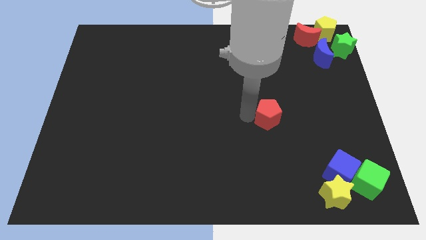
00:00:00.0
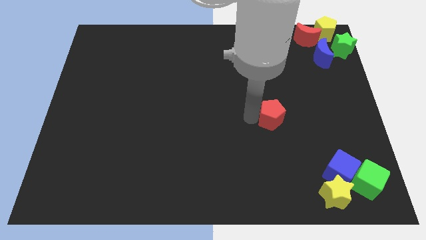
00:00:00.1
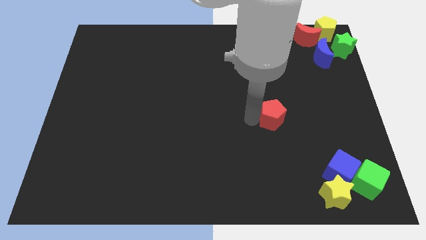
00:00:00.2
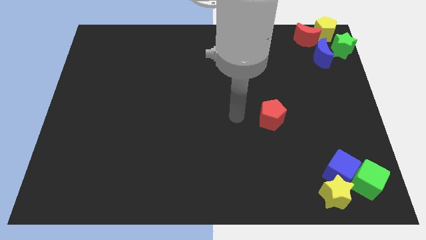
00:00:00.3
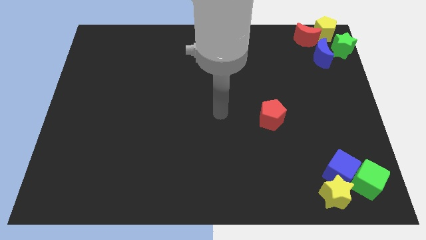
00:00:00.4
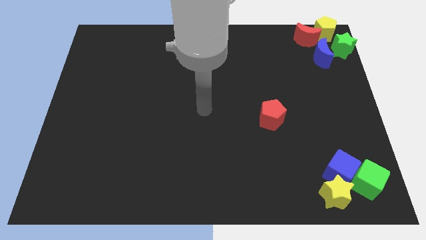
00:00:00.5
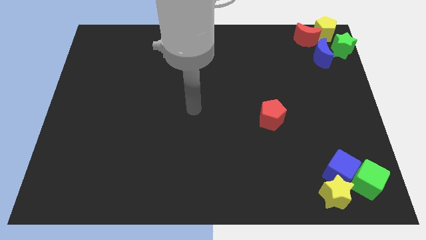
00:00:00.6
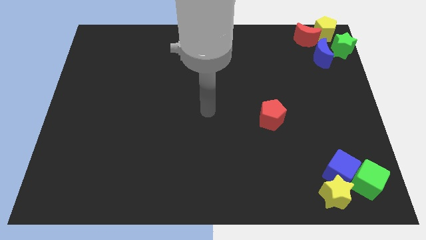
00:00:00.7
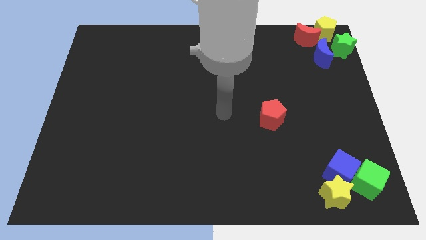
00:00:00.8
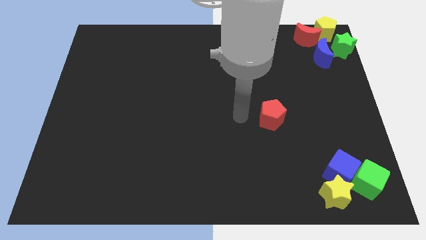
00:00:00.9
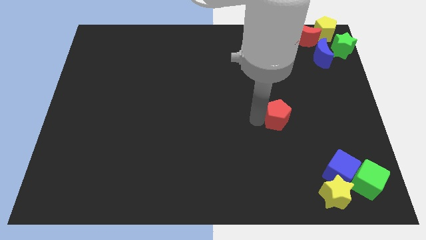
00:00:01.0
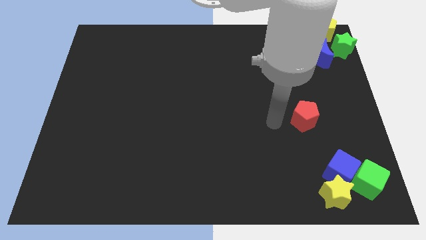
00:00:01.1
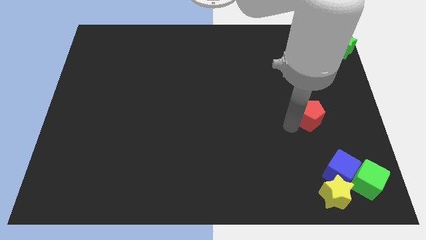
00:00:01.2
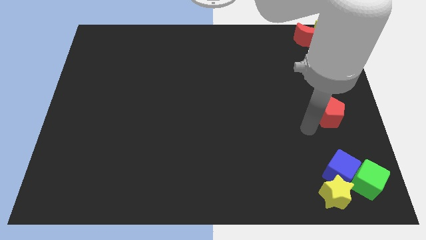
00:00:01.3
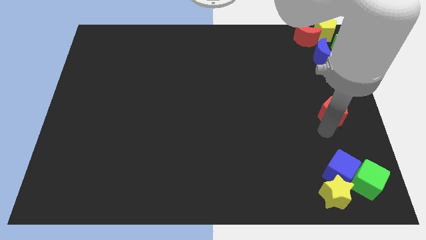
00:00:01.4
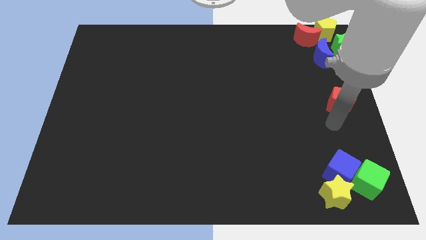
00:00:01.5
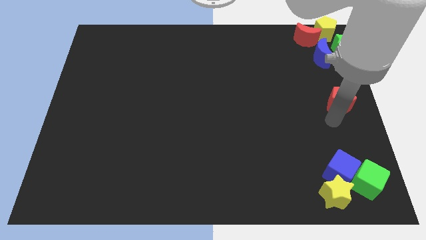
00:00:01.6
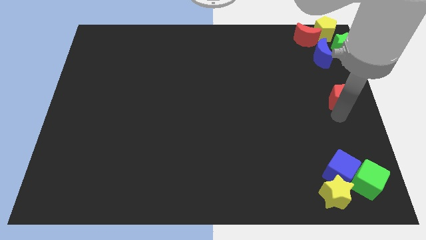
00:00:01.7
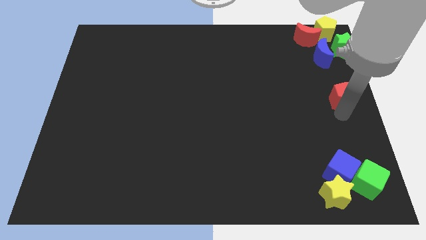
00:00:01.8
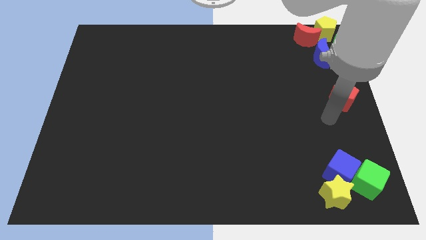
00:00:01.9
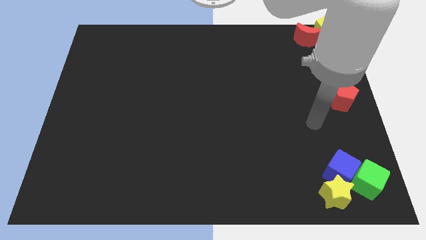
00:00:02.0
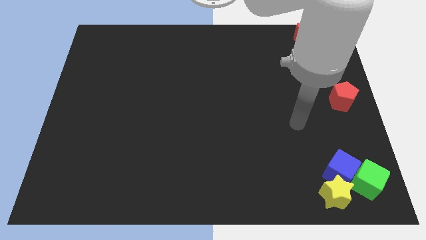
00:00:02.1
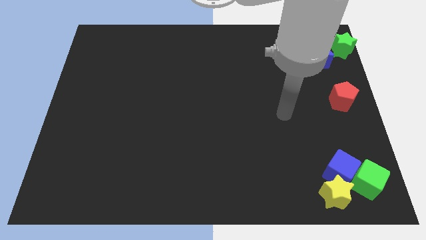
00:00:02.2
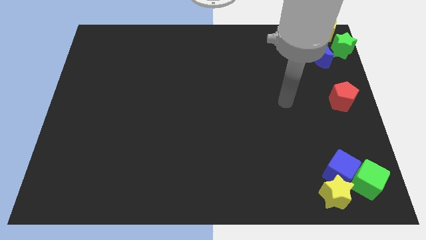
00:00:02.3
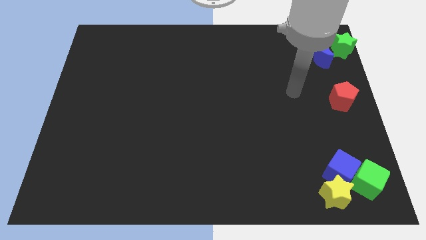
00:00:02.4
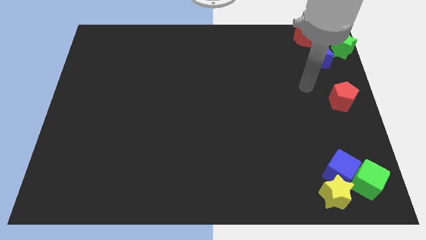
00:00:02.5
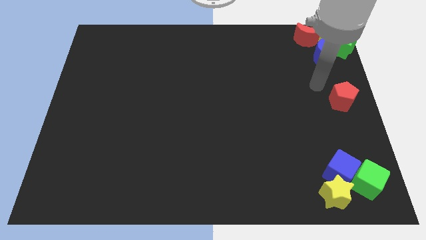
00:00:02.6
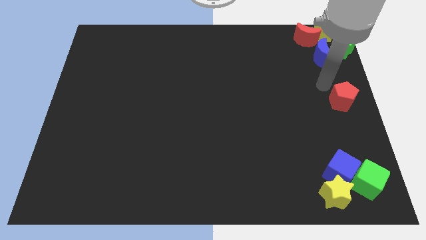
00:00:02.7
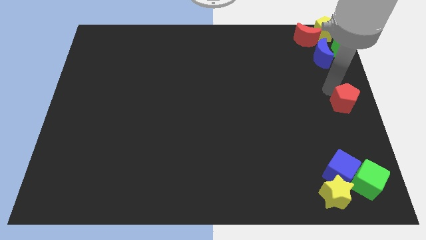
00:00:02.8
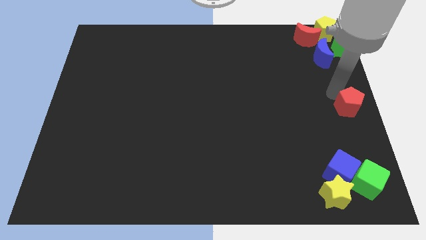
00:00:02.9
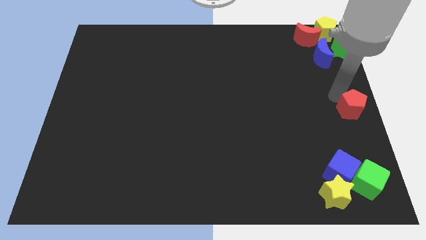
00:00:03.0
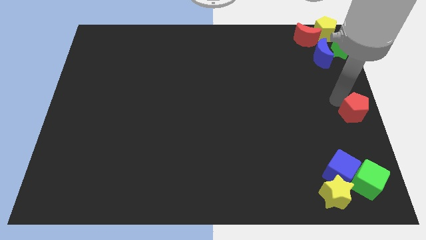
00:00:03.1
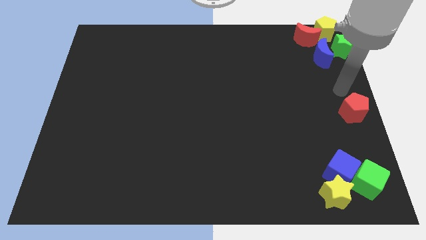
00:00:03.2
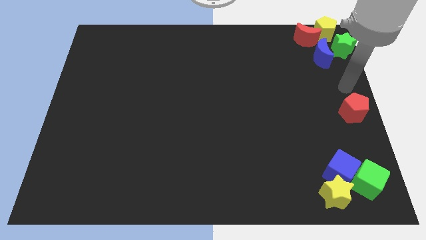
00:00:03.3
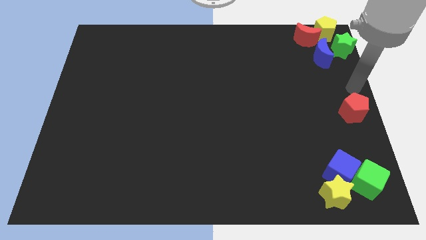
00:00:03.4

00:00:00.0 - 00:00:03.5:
place the red pentagon at the center right of the table

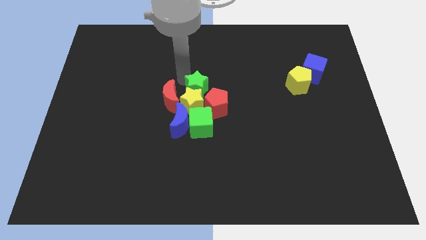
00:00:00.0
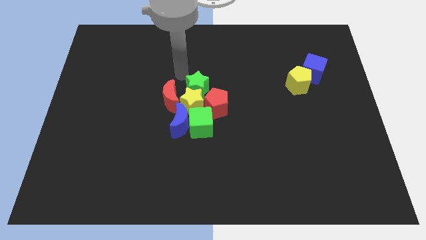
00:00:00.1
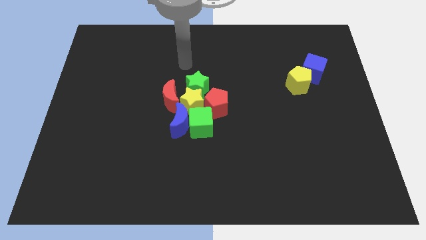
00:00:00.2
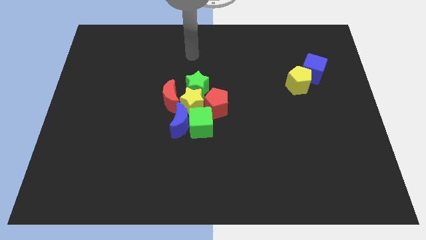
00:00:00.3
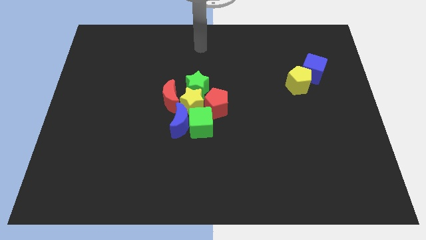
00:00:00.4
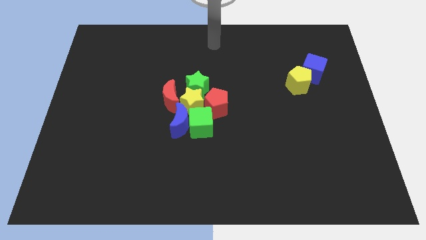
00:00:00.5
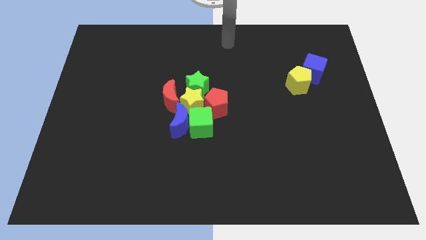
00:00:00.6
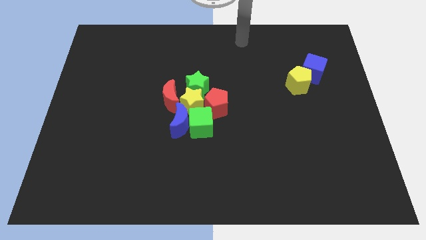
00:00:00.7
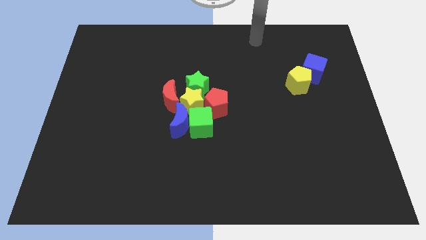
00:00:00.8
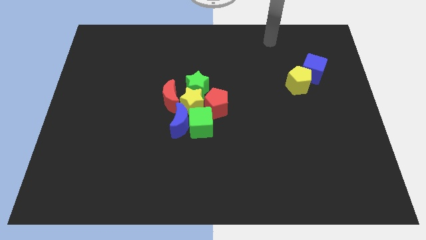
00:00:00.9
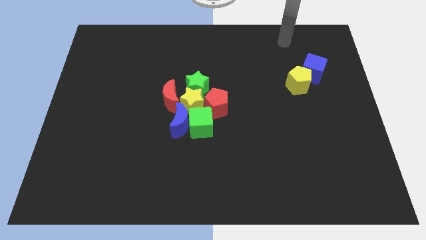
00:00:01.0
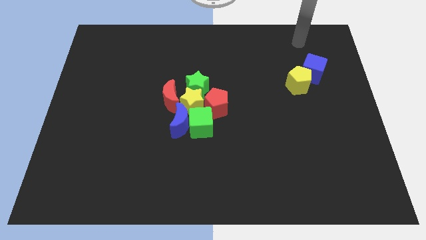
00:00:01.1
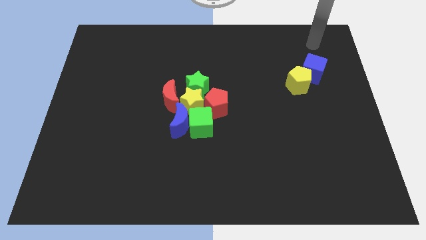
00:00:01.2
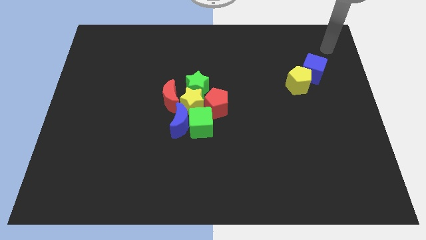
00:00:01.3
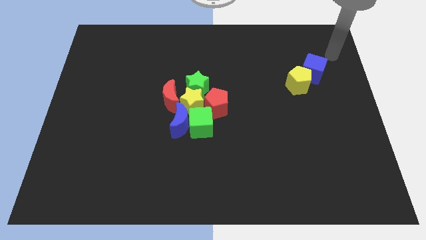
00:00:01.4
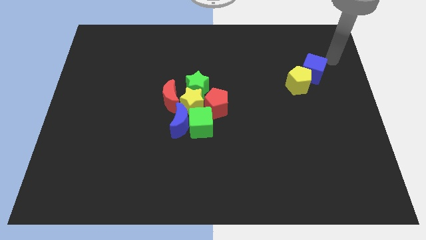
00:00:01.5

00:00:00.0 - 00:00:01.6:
point your arm at the top side of the blue cube

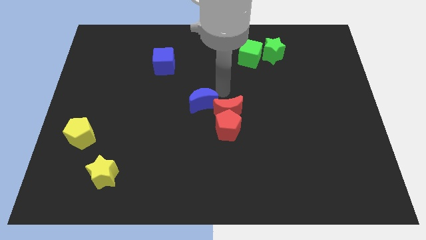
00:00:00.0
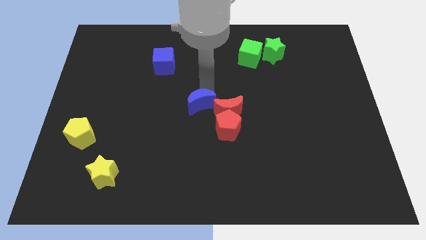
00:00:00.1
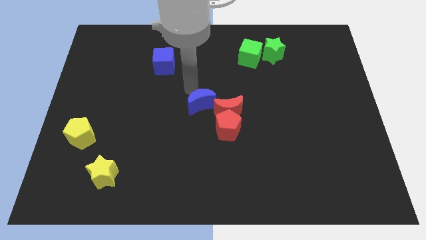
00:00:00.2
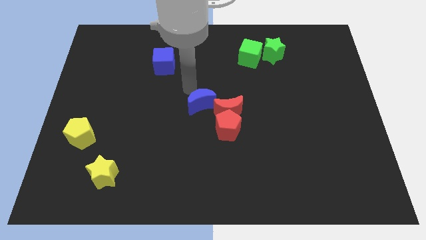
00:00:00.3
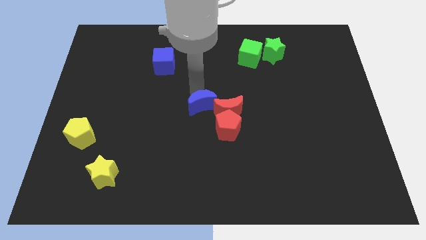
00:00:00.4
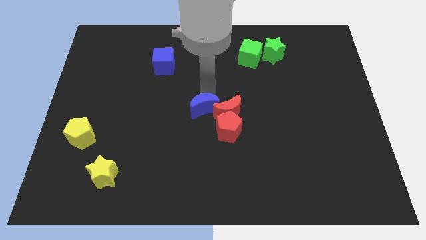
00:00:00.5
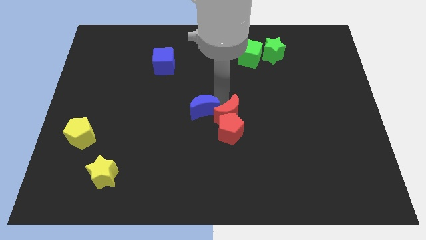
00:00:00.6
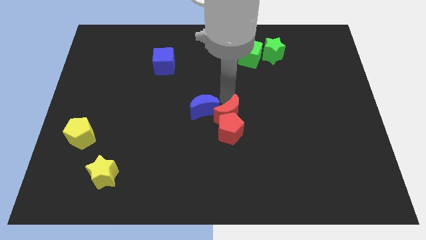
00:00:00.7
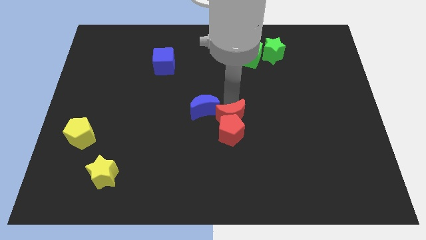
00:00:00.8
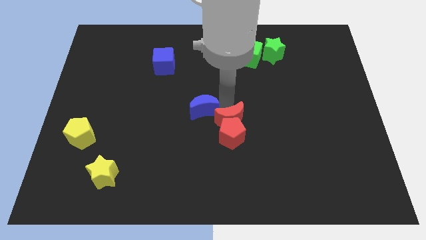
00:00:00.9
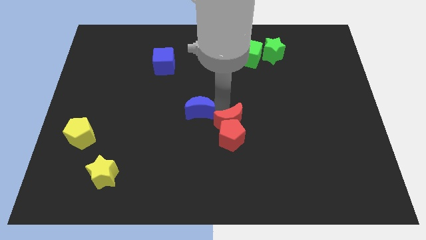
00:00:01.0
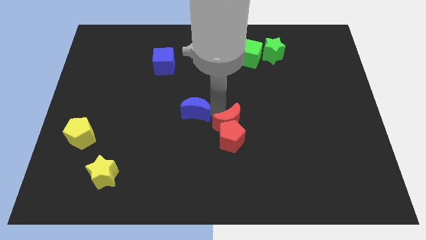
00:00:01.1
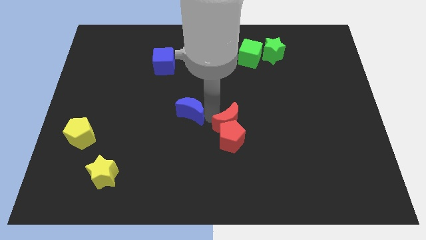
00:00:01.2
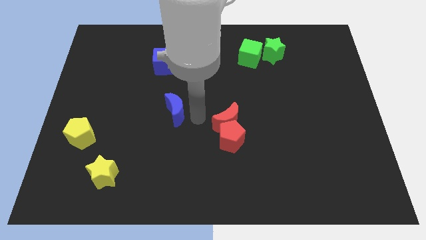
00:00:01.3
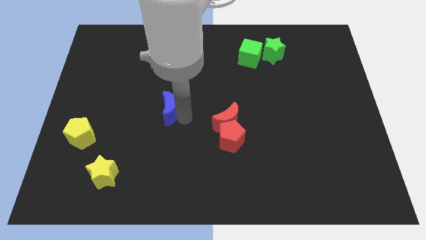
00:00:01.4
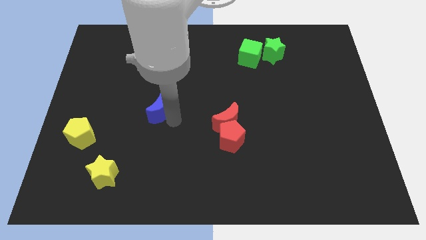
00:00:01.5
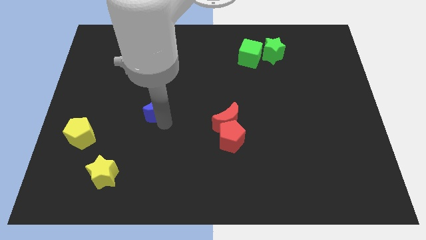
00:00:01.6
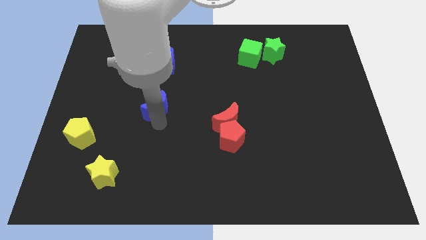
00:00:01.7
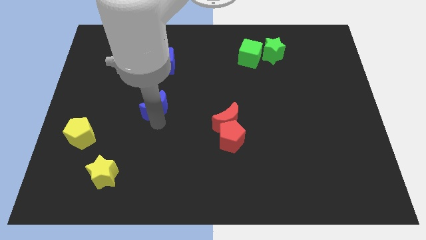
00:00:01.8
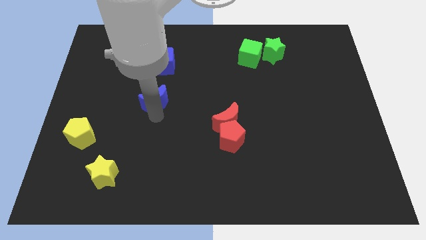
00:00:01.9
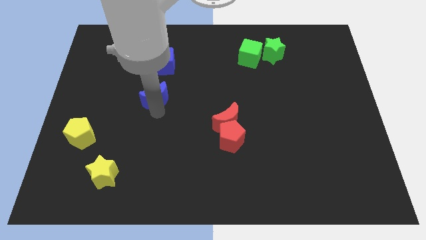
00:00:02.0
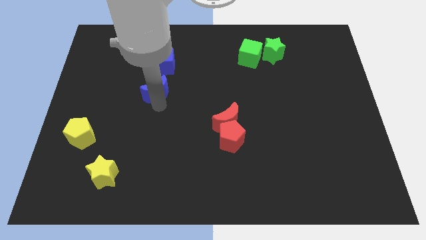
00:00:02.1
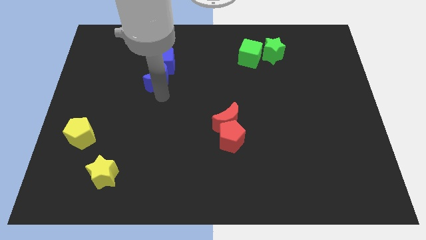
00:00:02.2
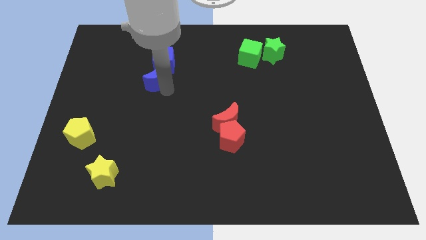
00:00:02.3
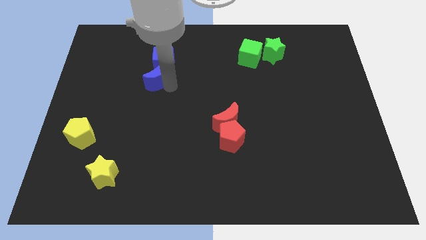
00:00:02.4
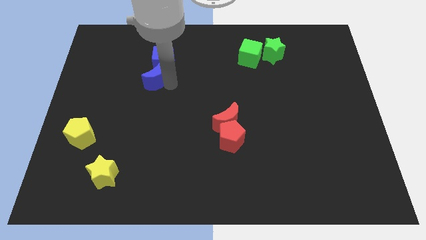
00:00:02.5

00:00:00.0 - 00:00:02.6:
place the blue moon at the bottom of the blue cube

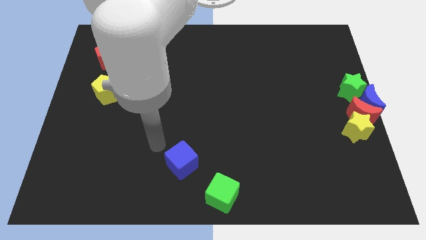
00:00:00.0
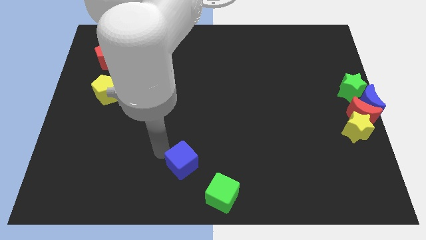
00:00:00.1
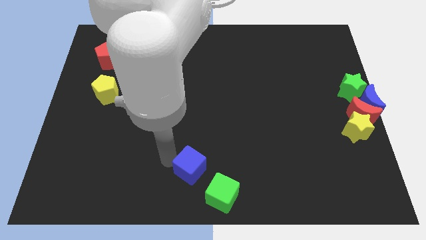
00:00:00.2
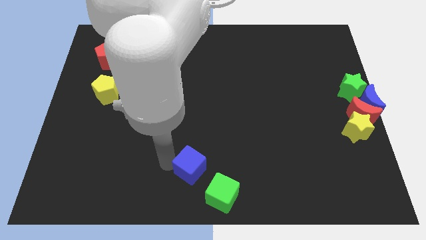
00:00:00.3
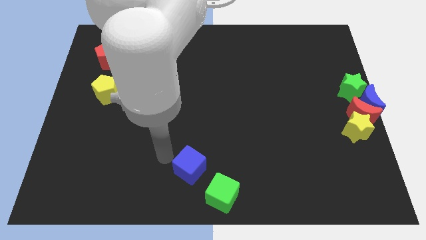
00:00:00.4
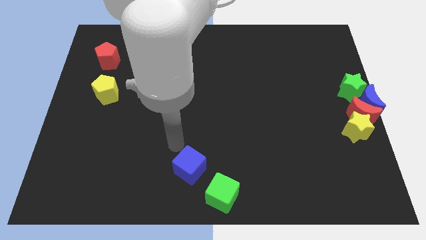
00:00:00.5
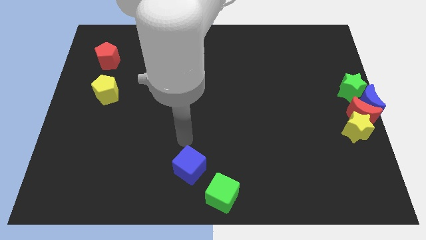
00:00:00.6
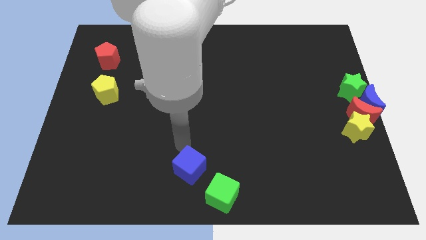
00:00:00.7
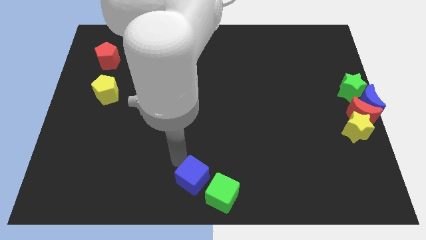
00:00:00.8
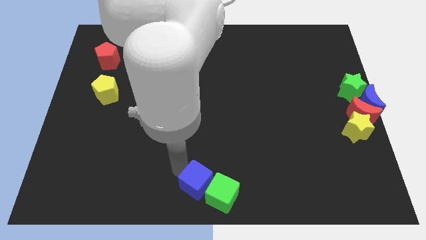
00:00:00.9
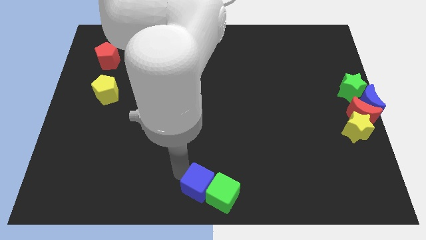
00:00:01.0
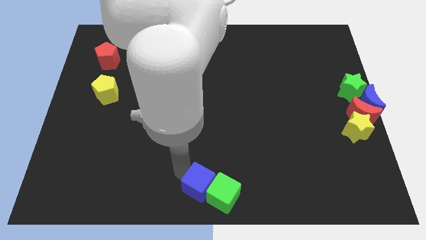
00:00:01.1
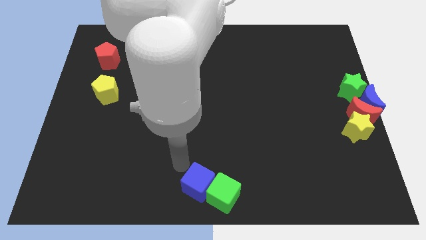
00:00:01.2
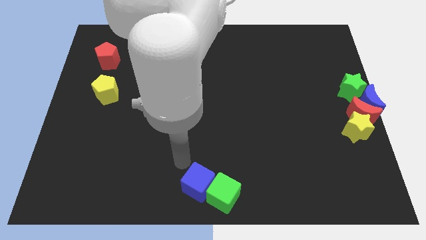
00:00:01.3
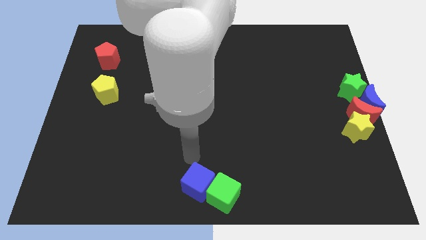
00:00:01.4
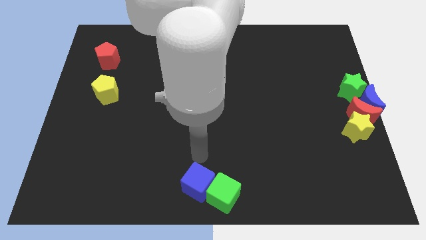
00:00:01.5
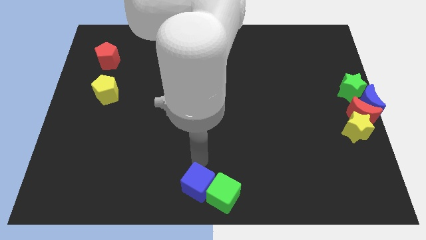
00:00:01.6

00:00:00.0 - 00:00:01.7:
push the blue cube into the green cube
